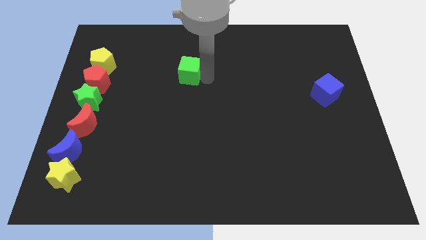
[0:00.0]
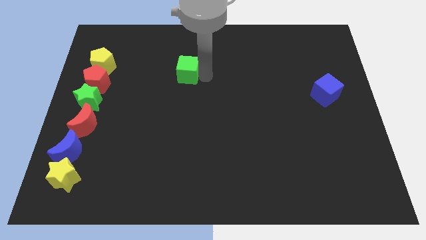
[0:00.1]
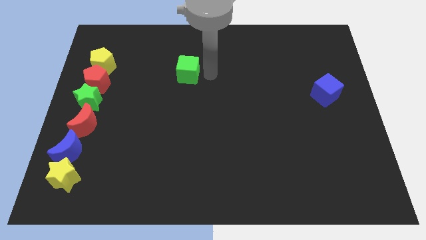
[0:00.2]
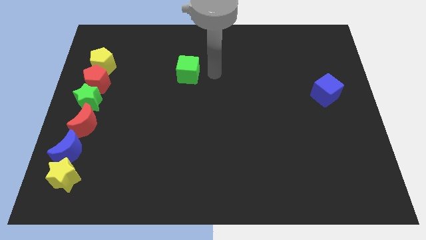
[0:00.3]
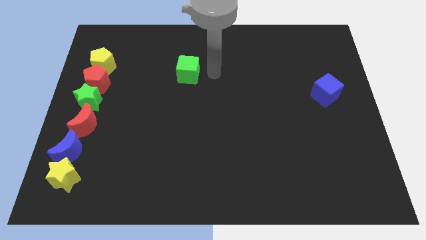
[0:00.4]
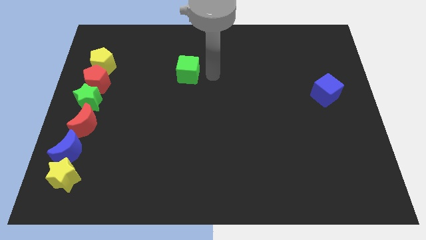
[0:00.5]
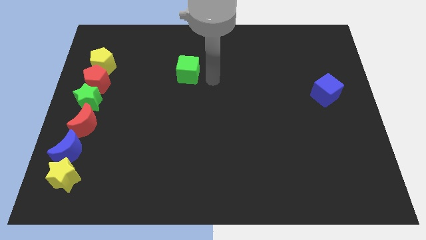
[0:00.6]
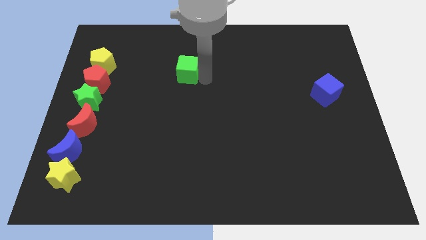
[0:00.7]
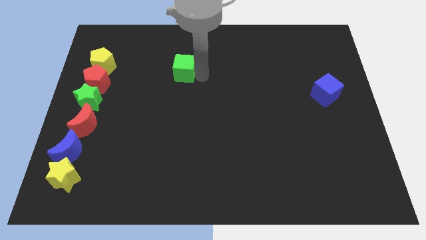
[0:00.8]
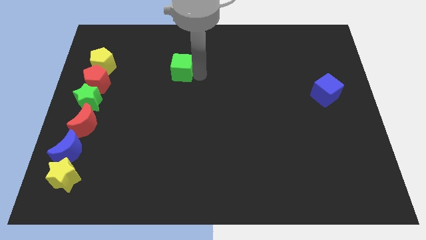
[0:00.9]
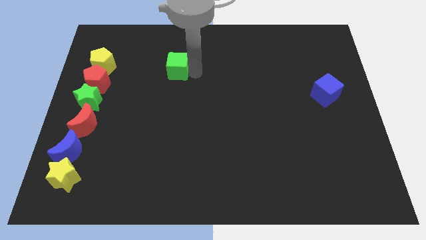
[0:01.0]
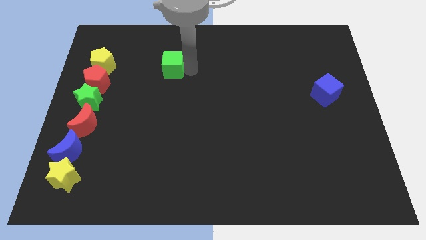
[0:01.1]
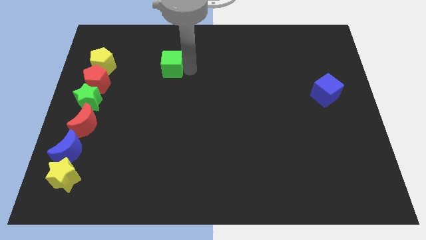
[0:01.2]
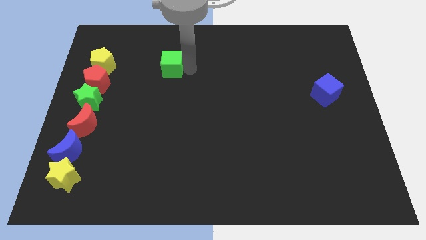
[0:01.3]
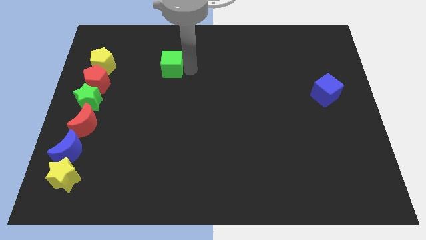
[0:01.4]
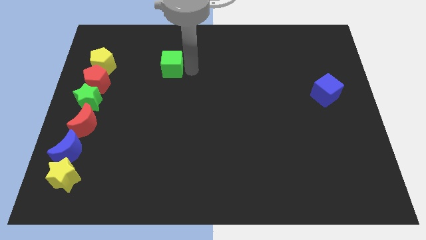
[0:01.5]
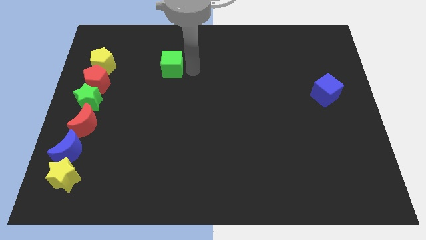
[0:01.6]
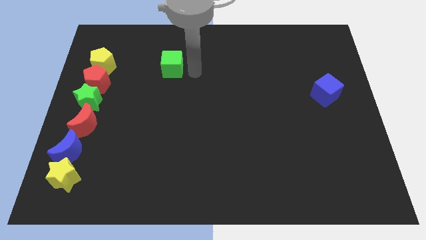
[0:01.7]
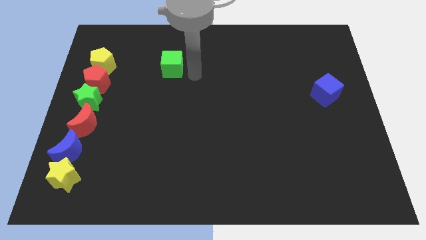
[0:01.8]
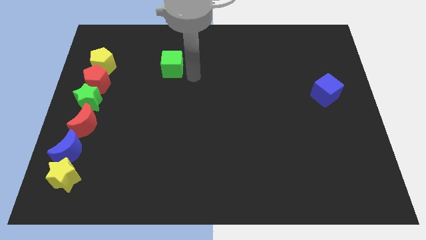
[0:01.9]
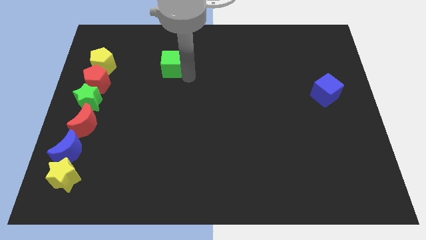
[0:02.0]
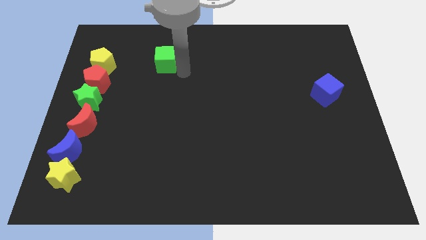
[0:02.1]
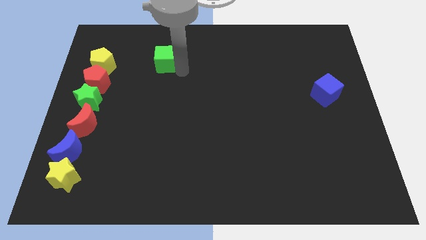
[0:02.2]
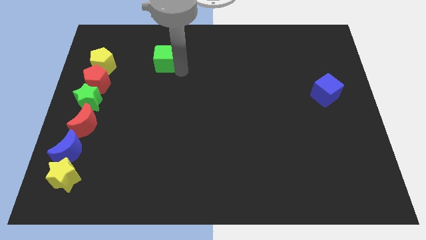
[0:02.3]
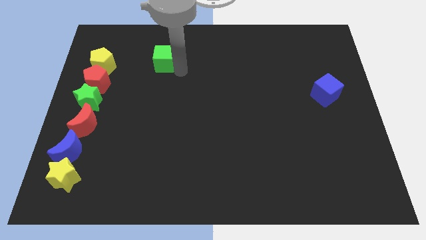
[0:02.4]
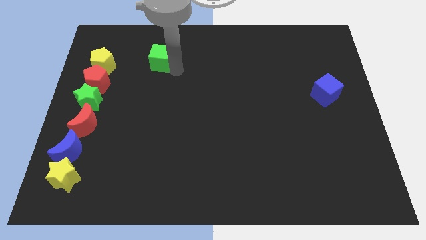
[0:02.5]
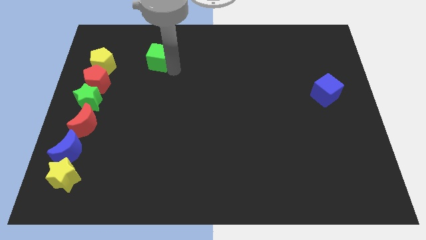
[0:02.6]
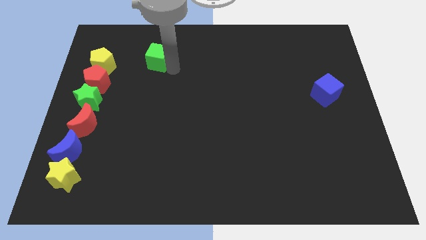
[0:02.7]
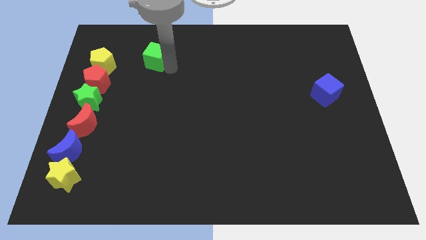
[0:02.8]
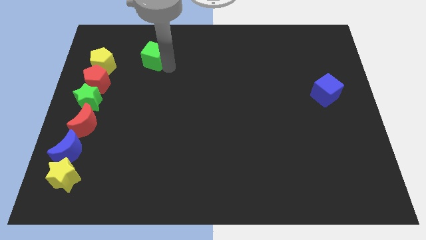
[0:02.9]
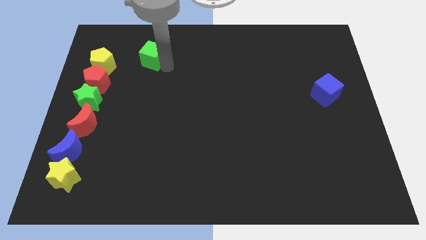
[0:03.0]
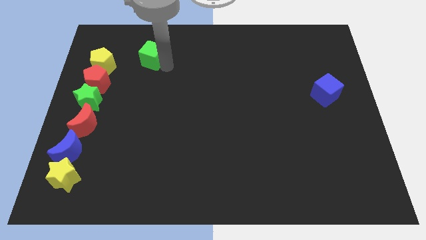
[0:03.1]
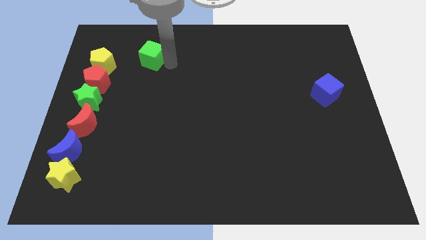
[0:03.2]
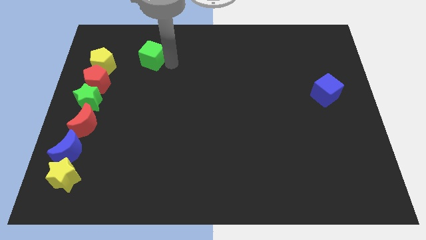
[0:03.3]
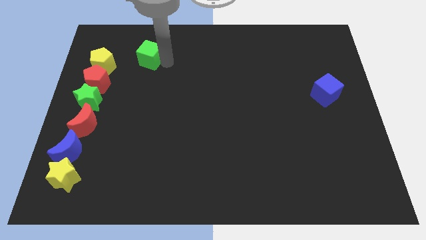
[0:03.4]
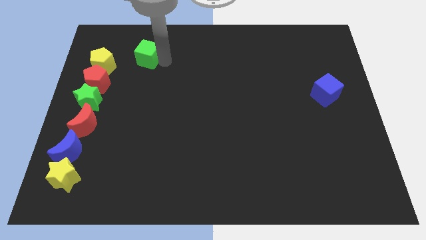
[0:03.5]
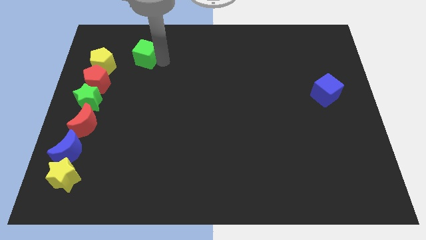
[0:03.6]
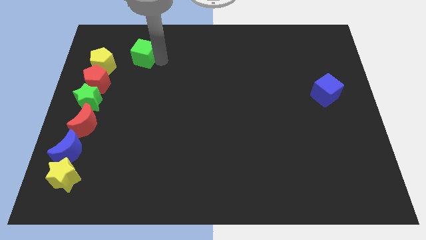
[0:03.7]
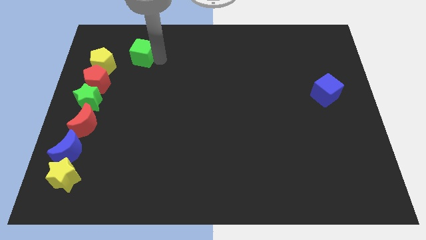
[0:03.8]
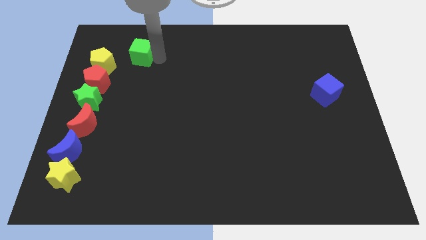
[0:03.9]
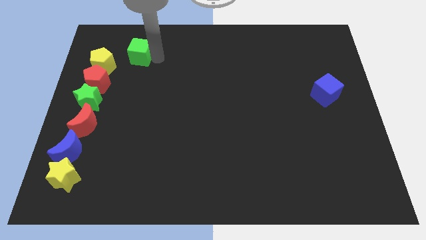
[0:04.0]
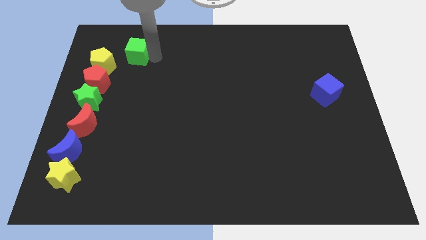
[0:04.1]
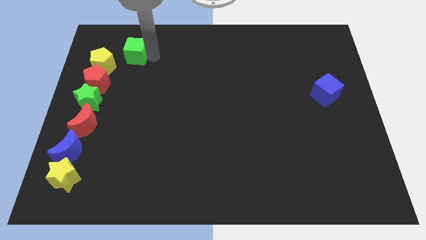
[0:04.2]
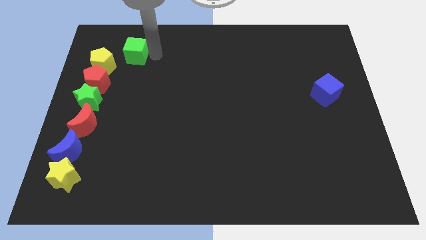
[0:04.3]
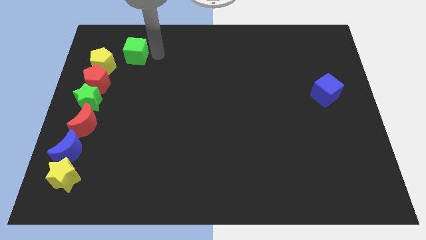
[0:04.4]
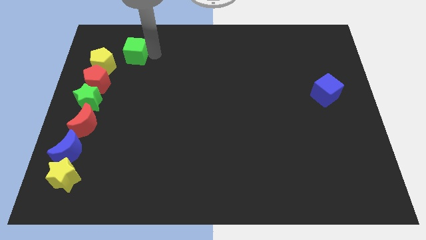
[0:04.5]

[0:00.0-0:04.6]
place green cube to the top right of the yellow pentagon

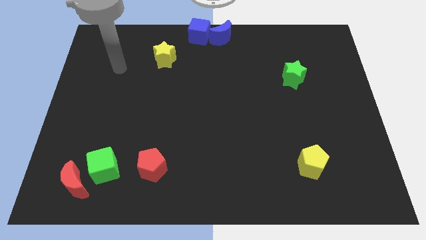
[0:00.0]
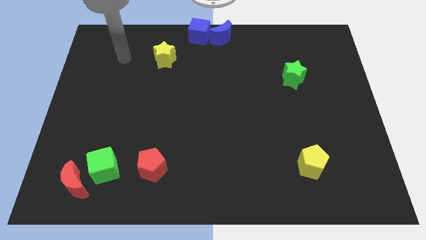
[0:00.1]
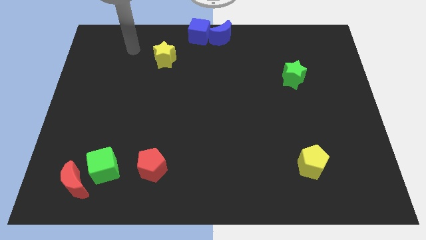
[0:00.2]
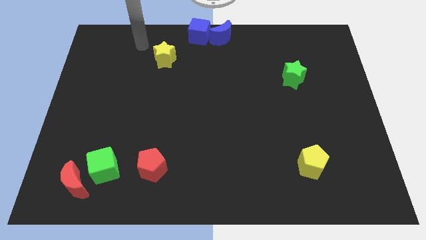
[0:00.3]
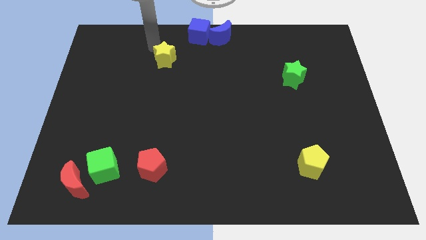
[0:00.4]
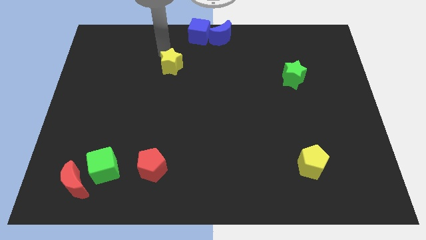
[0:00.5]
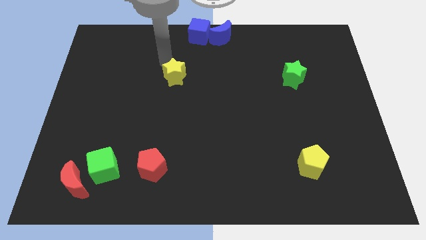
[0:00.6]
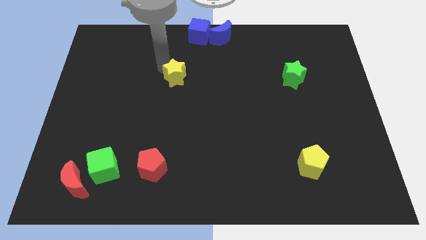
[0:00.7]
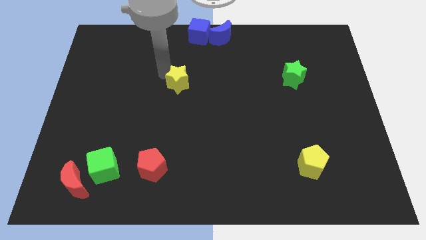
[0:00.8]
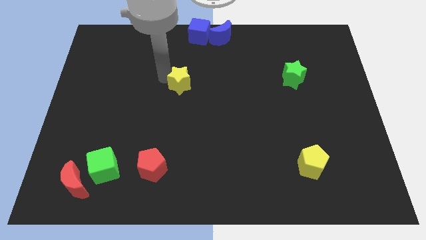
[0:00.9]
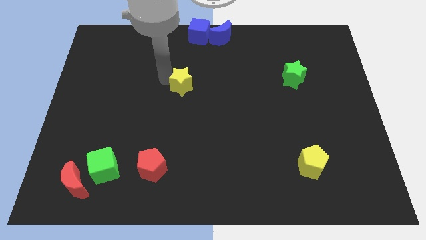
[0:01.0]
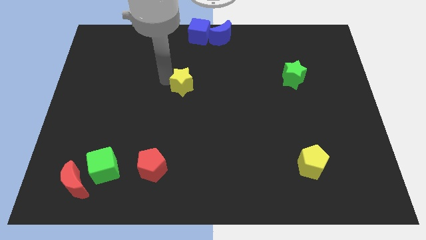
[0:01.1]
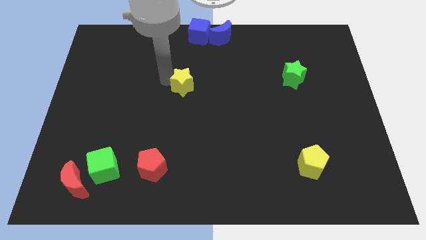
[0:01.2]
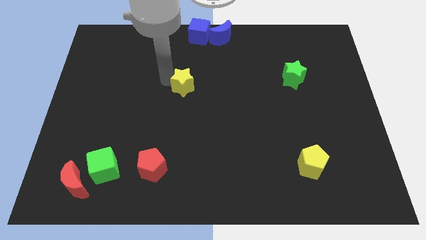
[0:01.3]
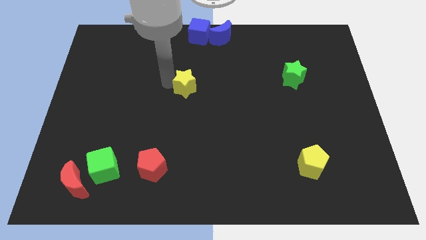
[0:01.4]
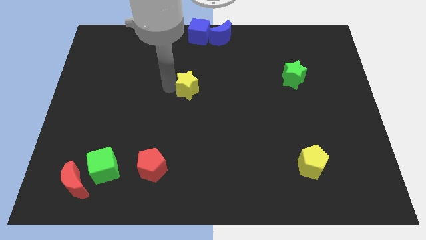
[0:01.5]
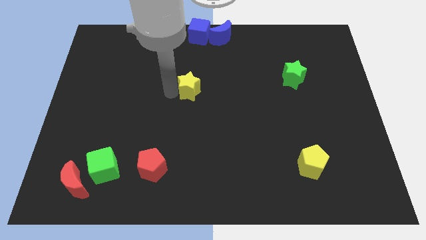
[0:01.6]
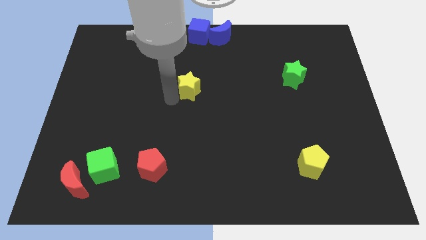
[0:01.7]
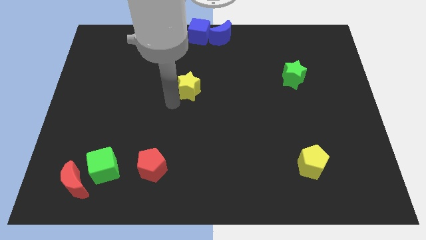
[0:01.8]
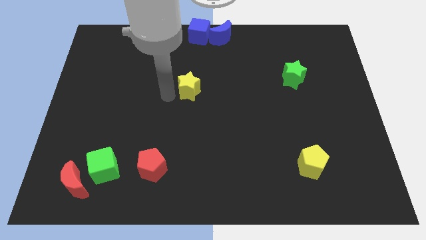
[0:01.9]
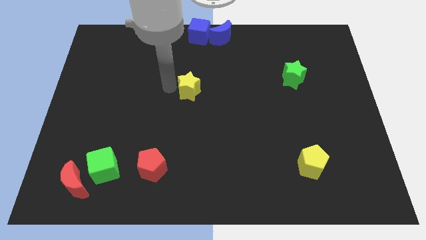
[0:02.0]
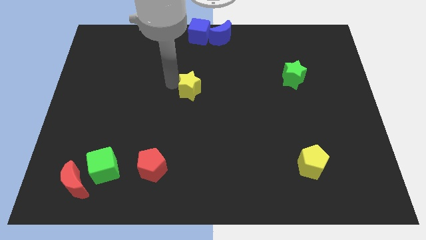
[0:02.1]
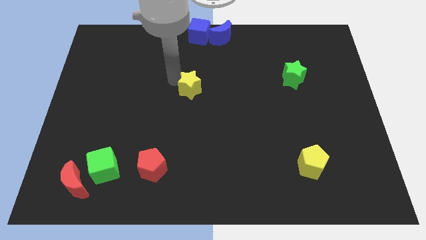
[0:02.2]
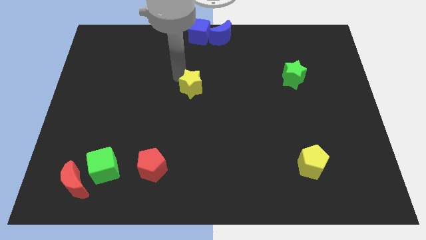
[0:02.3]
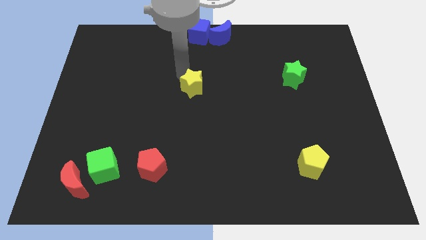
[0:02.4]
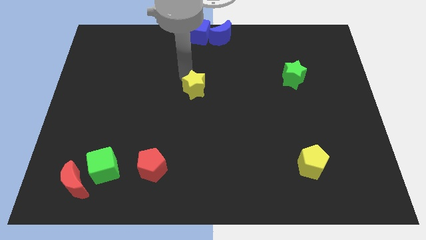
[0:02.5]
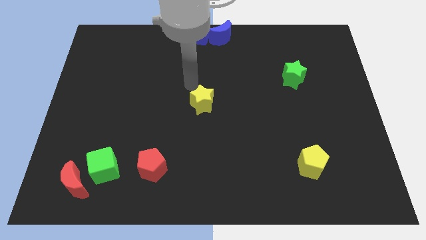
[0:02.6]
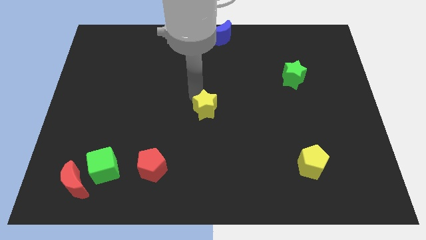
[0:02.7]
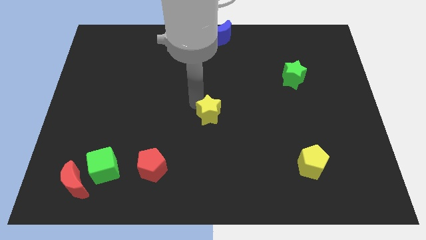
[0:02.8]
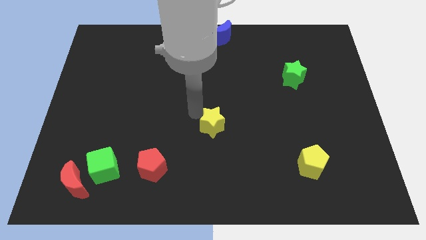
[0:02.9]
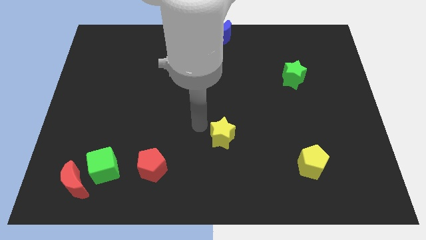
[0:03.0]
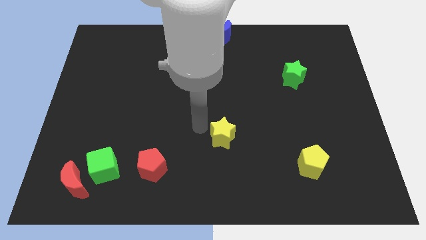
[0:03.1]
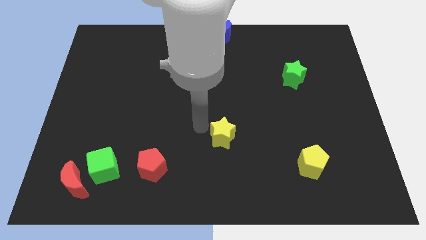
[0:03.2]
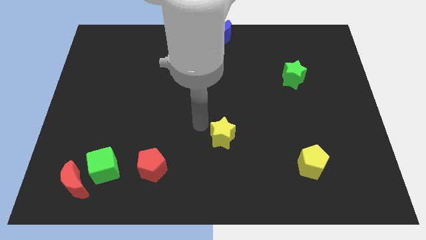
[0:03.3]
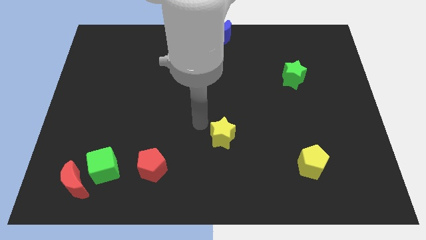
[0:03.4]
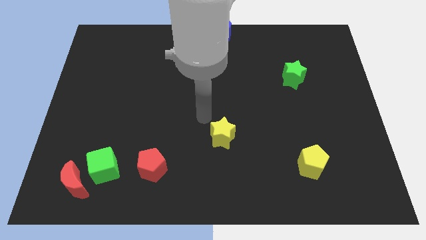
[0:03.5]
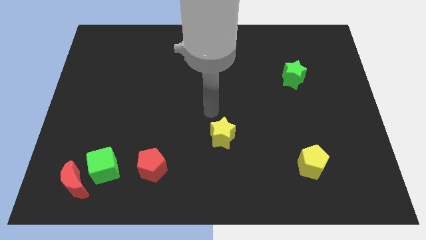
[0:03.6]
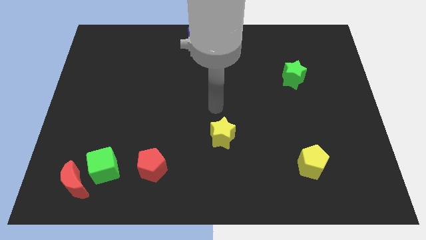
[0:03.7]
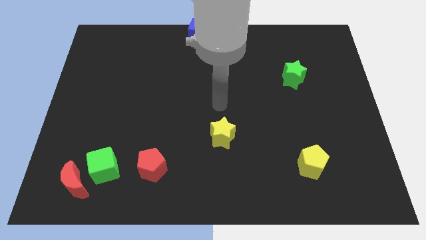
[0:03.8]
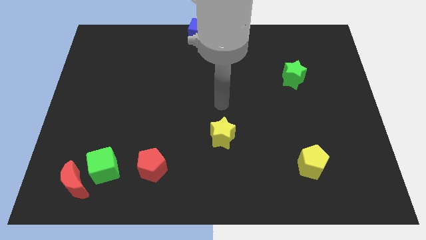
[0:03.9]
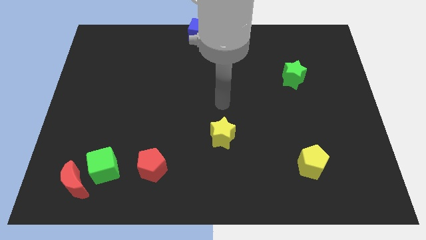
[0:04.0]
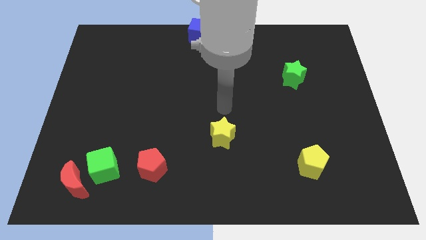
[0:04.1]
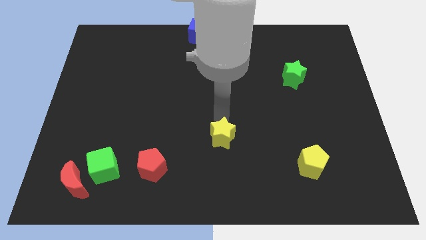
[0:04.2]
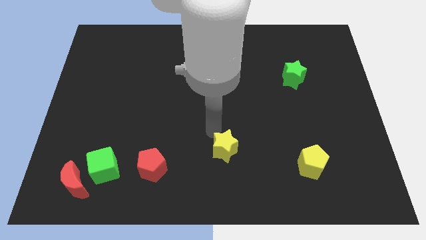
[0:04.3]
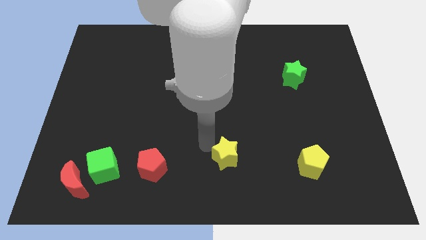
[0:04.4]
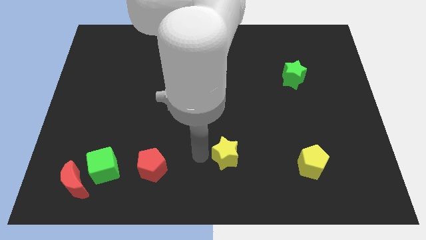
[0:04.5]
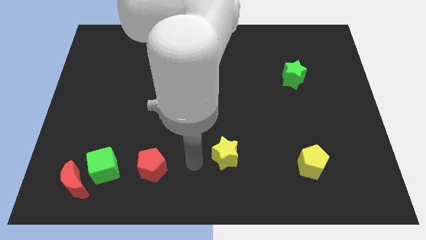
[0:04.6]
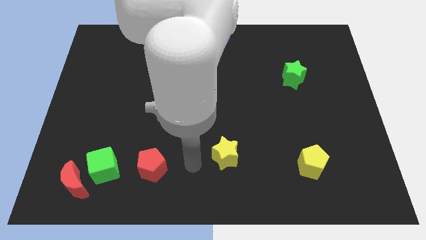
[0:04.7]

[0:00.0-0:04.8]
place the yellow star left to the yellow pentagon
